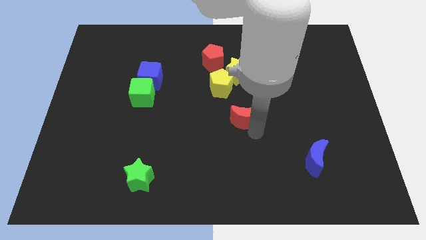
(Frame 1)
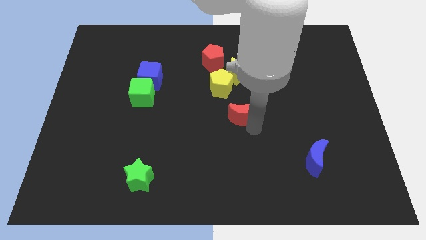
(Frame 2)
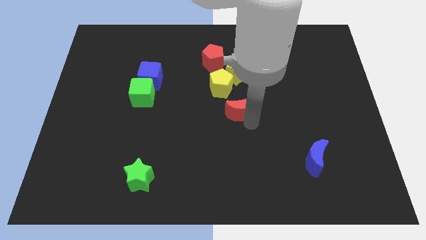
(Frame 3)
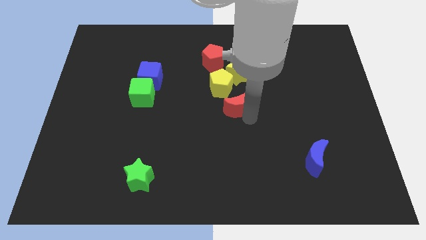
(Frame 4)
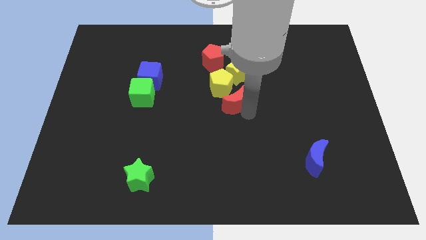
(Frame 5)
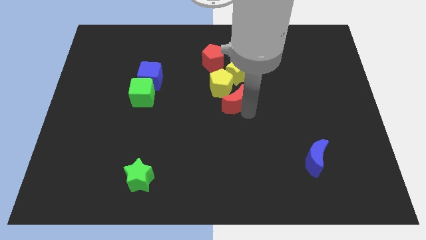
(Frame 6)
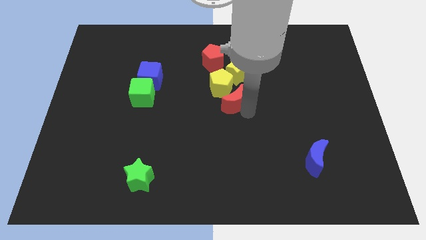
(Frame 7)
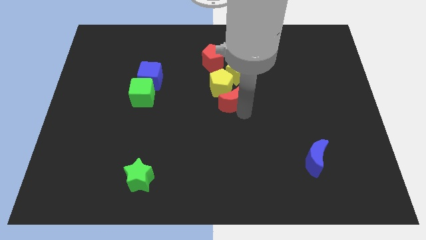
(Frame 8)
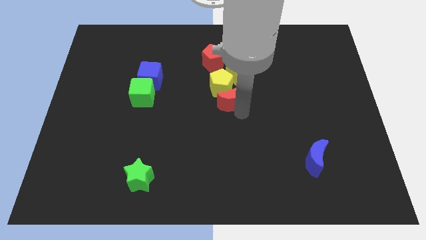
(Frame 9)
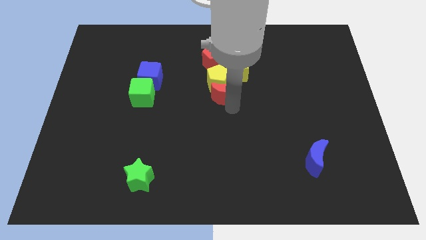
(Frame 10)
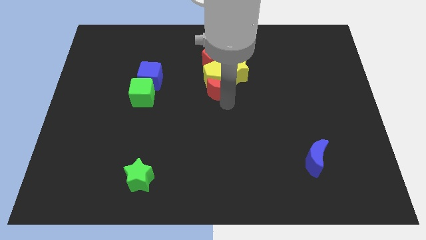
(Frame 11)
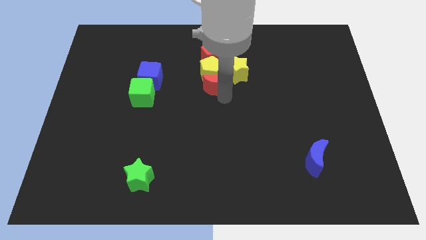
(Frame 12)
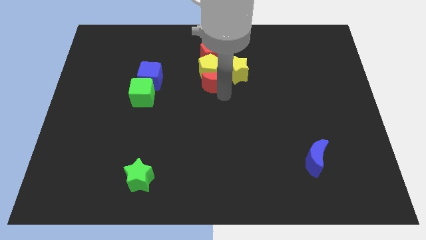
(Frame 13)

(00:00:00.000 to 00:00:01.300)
drag the red moon close to the yellow pentagon

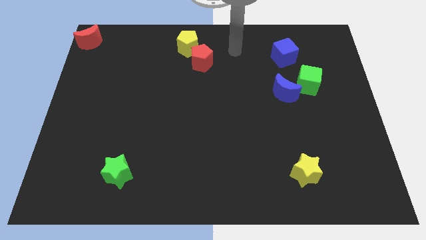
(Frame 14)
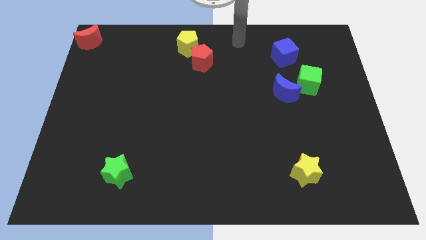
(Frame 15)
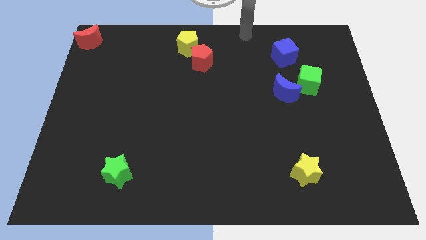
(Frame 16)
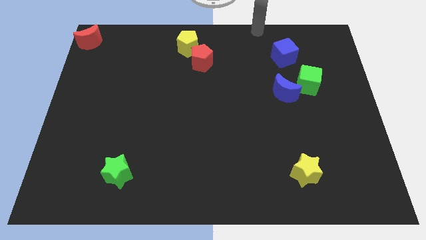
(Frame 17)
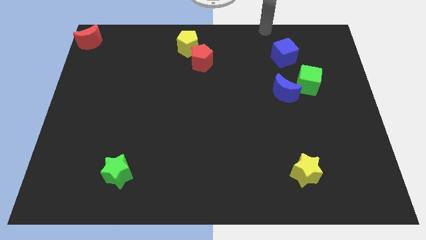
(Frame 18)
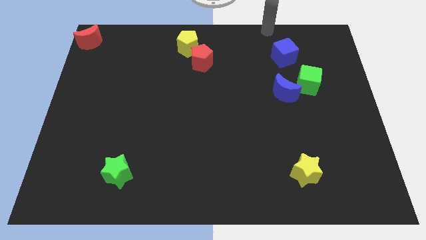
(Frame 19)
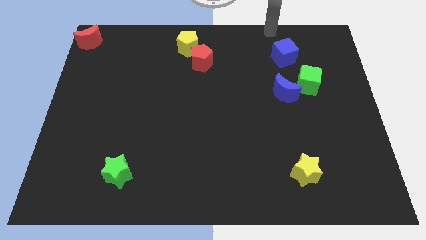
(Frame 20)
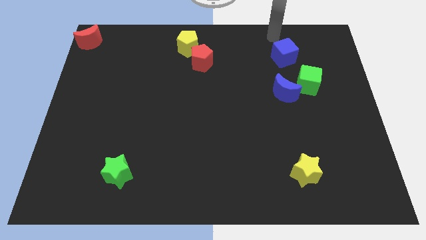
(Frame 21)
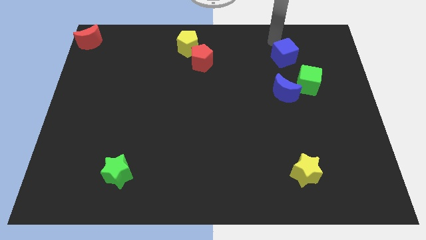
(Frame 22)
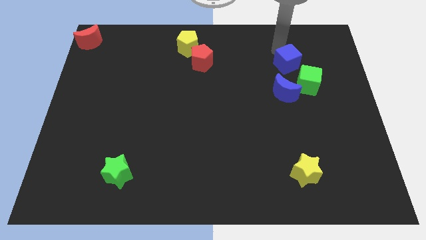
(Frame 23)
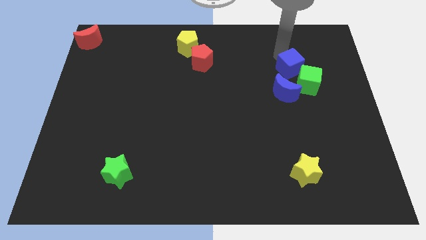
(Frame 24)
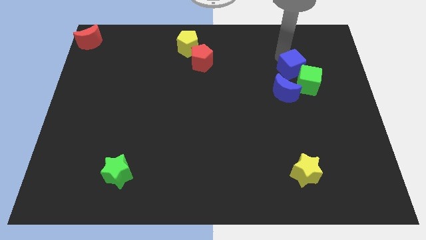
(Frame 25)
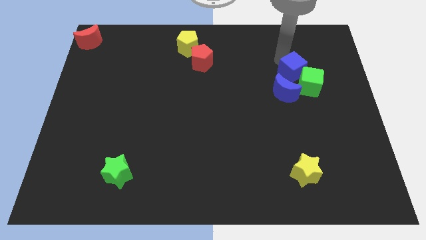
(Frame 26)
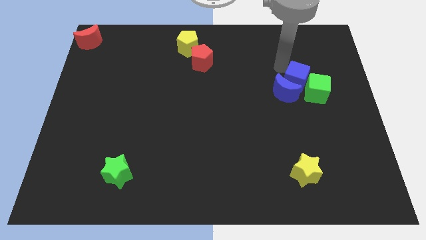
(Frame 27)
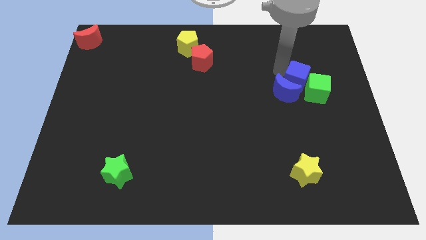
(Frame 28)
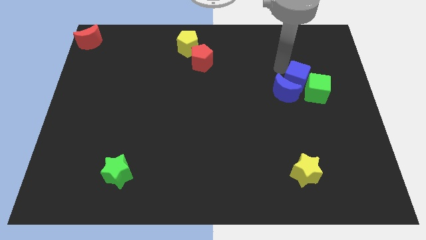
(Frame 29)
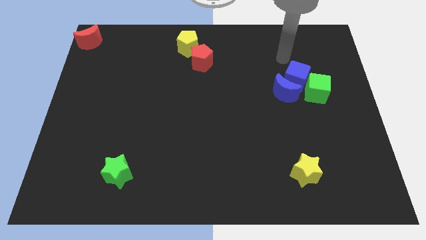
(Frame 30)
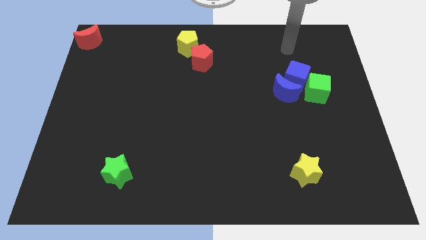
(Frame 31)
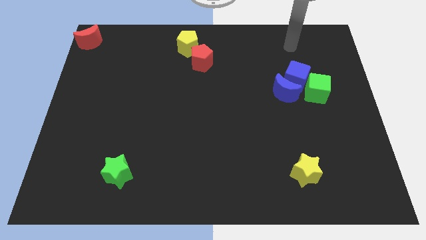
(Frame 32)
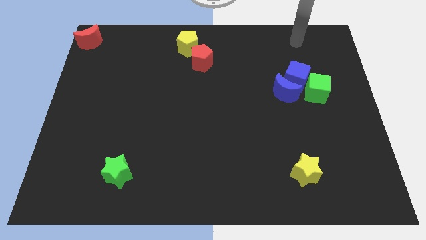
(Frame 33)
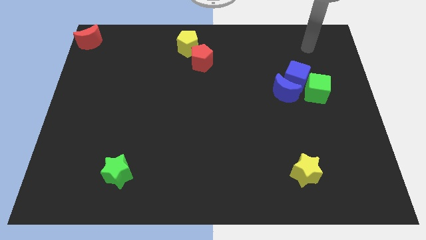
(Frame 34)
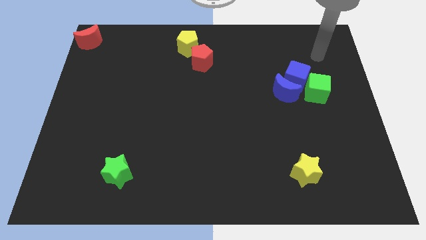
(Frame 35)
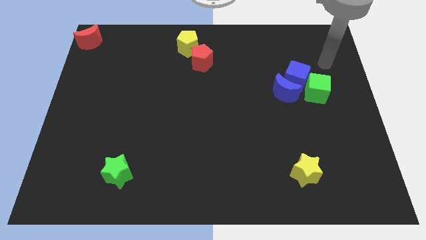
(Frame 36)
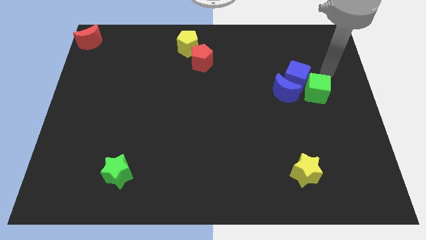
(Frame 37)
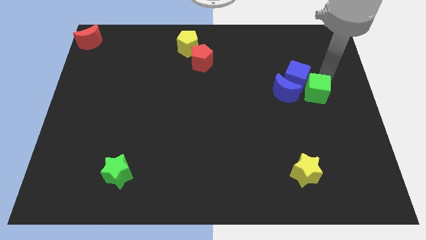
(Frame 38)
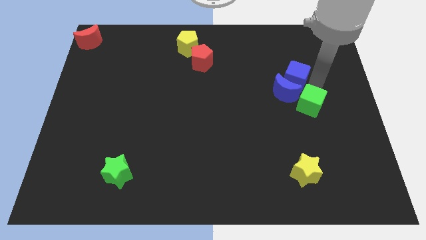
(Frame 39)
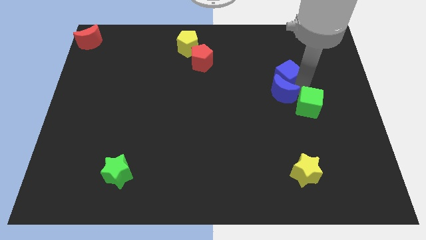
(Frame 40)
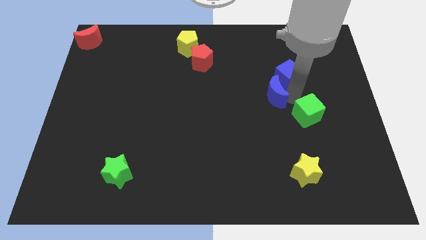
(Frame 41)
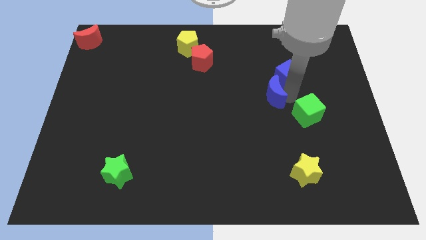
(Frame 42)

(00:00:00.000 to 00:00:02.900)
push the blue cube into the blue moon

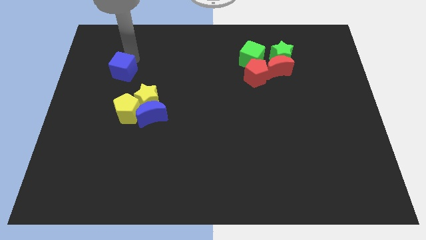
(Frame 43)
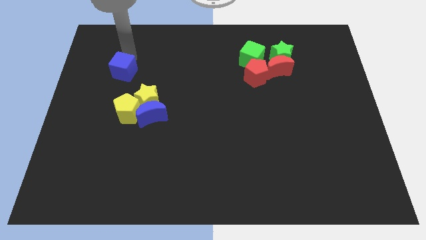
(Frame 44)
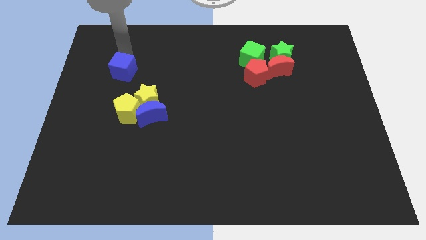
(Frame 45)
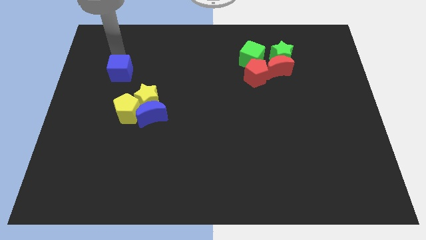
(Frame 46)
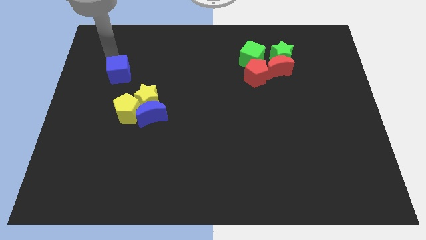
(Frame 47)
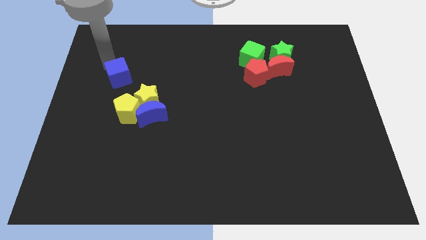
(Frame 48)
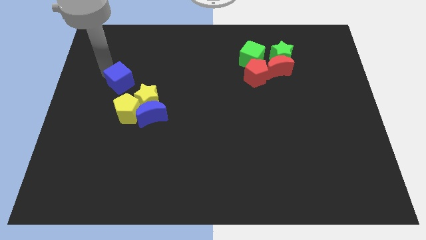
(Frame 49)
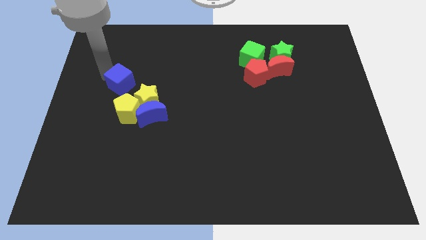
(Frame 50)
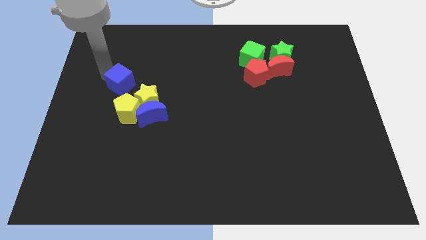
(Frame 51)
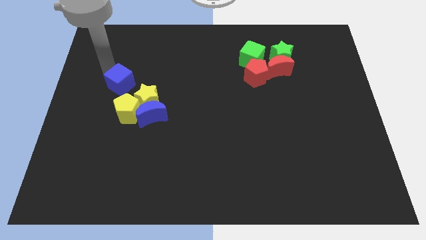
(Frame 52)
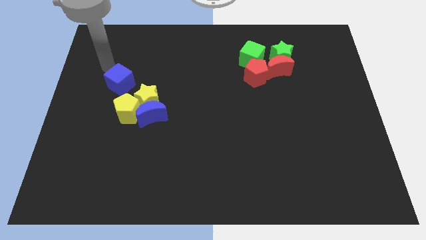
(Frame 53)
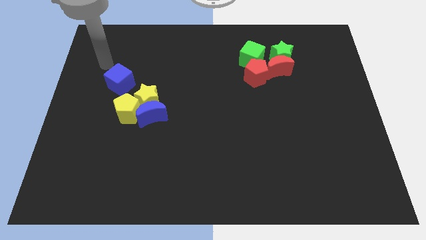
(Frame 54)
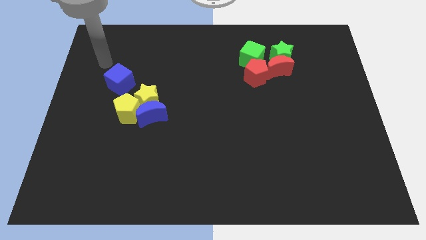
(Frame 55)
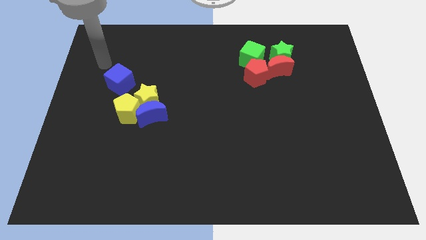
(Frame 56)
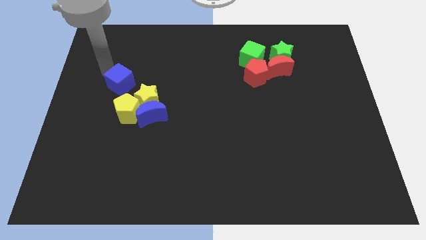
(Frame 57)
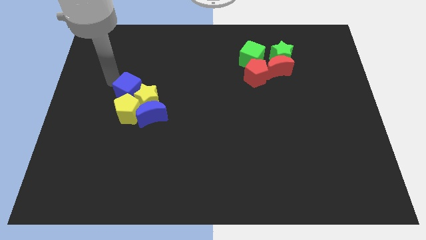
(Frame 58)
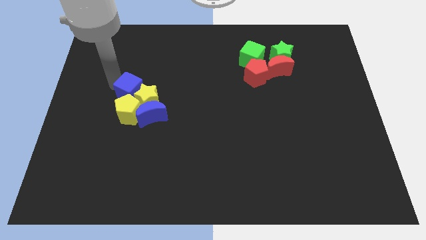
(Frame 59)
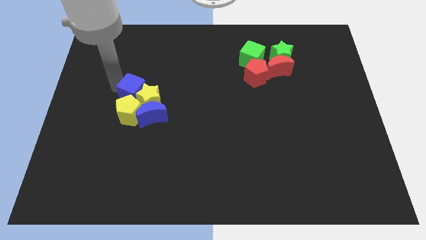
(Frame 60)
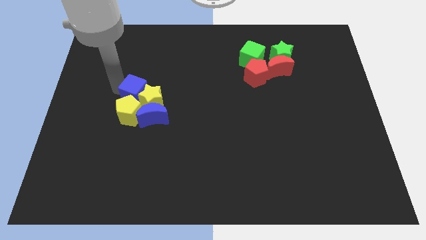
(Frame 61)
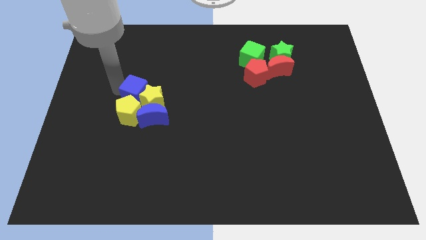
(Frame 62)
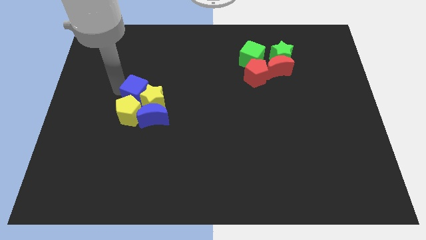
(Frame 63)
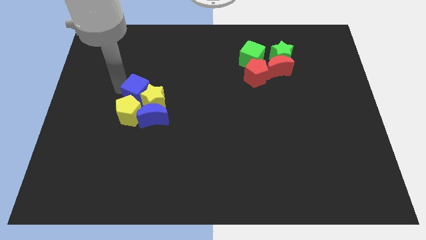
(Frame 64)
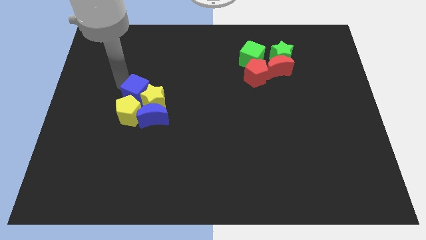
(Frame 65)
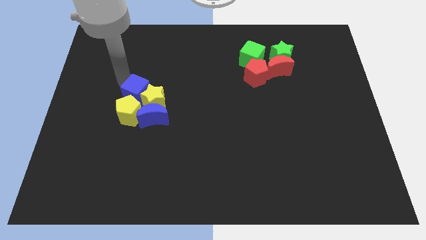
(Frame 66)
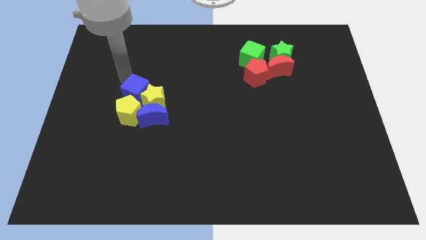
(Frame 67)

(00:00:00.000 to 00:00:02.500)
move the blue cube into yellow star

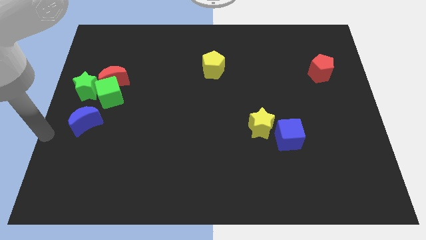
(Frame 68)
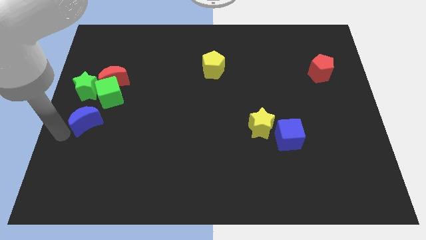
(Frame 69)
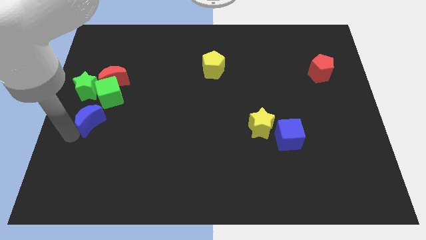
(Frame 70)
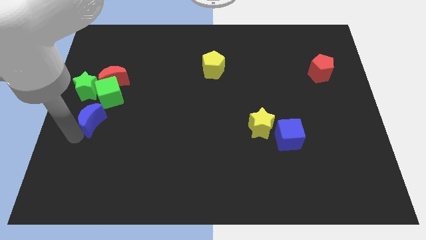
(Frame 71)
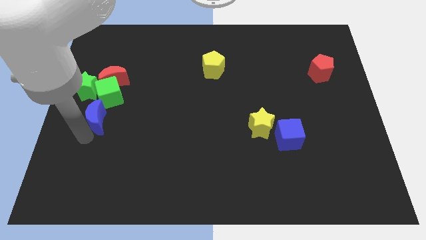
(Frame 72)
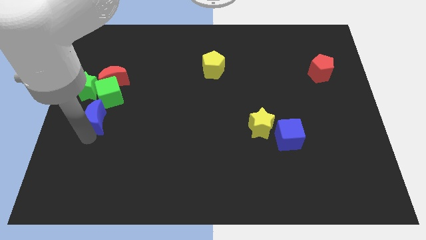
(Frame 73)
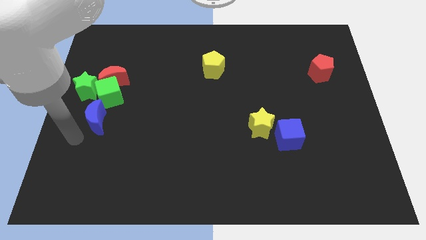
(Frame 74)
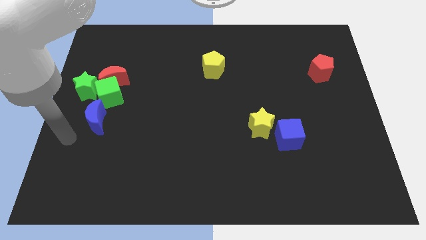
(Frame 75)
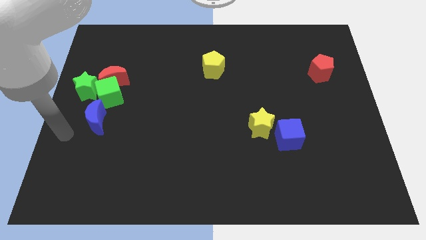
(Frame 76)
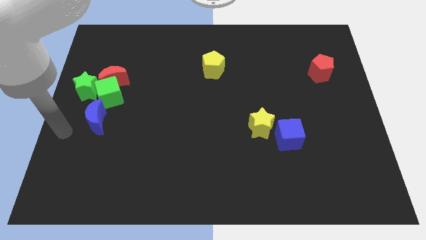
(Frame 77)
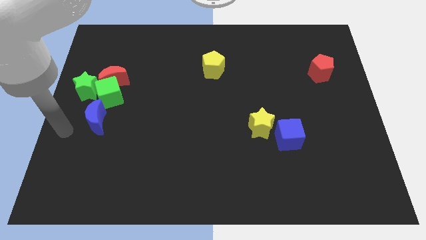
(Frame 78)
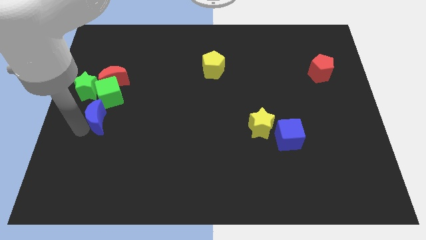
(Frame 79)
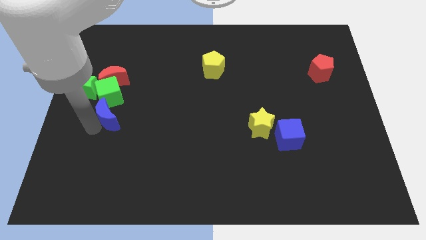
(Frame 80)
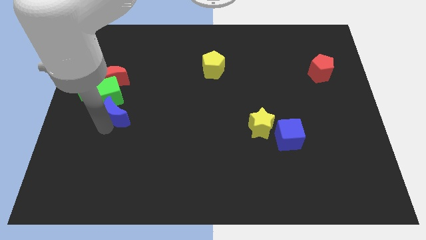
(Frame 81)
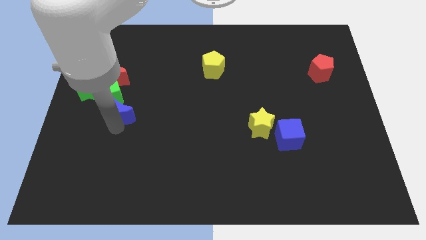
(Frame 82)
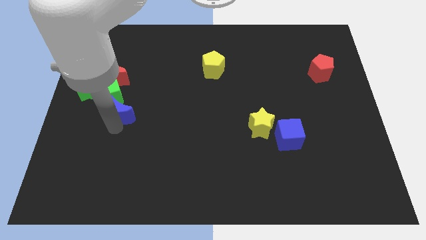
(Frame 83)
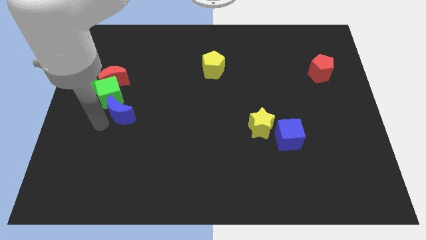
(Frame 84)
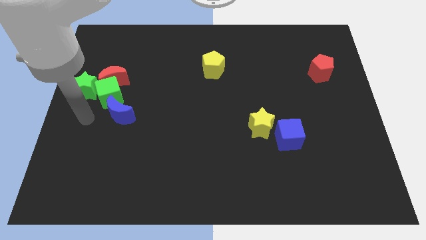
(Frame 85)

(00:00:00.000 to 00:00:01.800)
put the blue moon at the bottom of the green cube

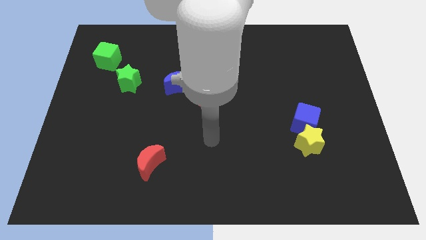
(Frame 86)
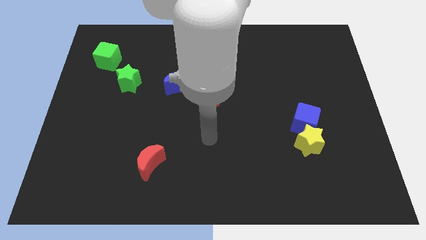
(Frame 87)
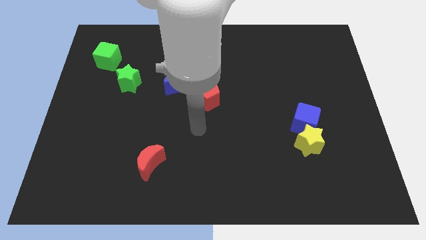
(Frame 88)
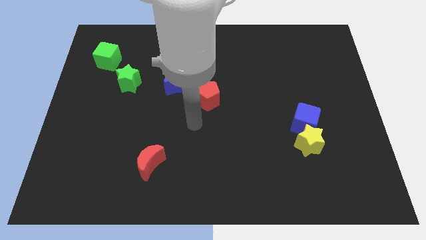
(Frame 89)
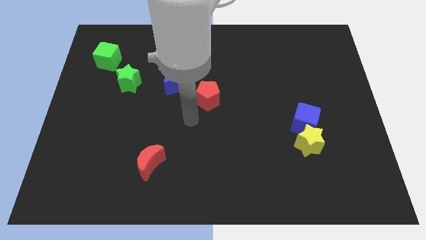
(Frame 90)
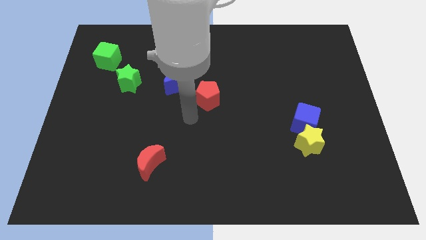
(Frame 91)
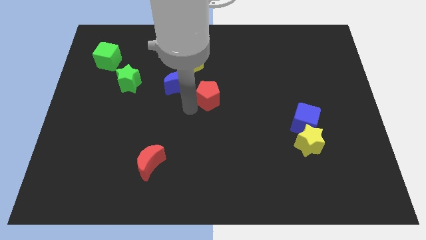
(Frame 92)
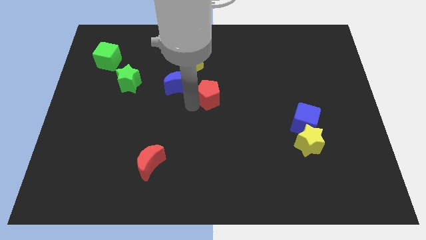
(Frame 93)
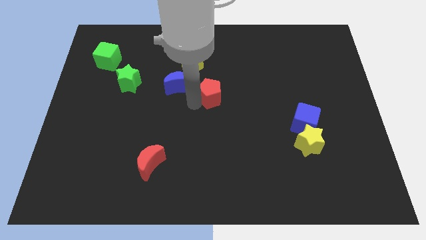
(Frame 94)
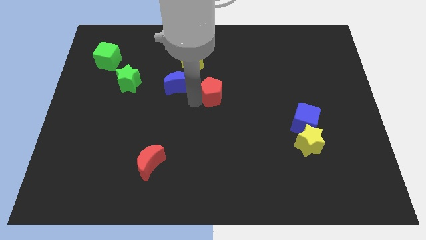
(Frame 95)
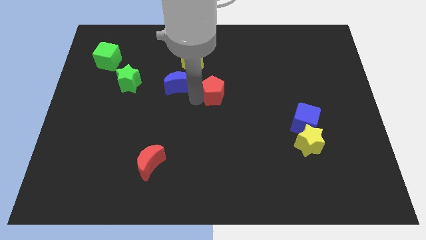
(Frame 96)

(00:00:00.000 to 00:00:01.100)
touch the left side of the red block
